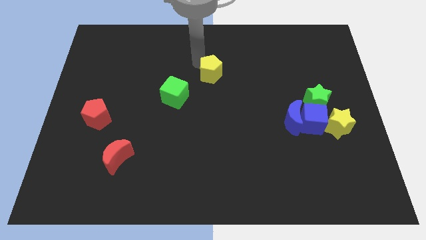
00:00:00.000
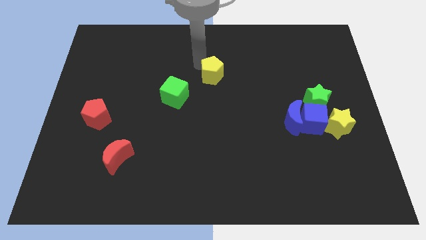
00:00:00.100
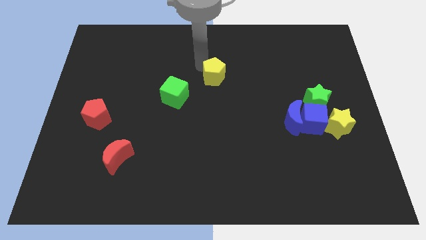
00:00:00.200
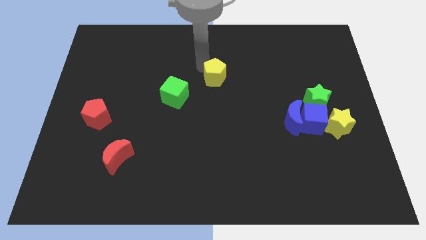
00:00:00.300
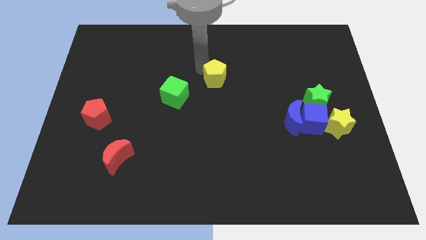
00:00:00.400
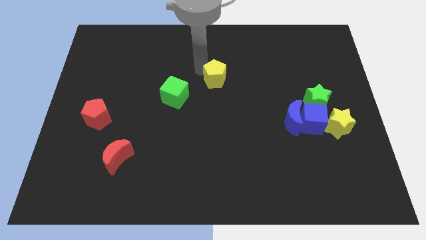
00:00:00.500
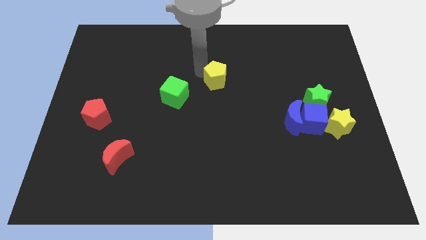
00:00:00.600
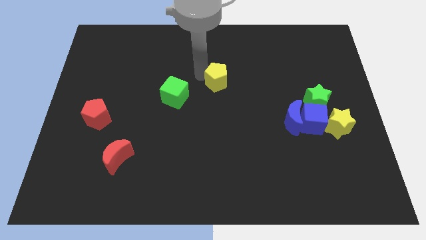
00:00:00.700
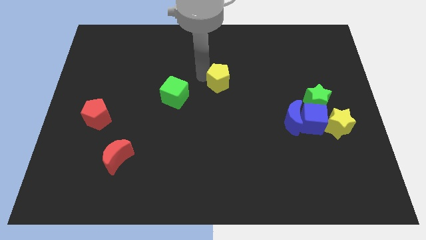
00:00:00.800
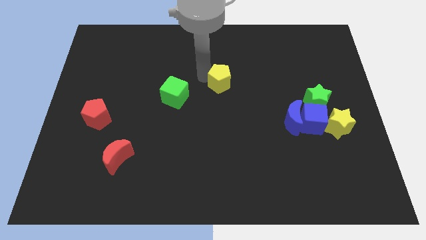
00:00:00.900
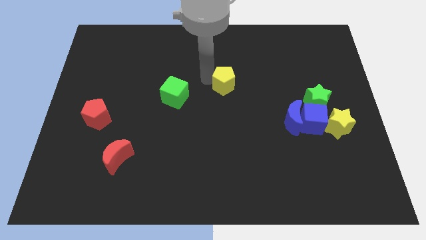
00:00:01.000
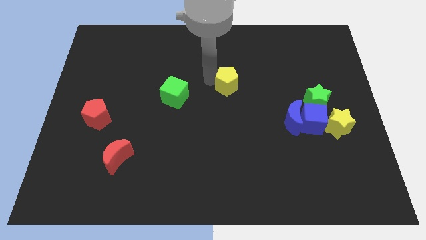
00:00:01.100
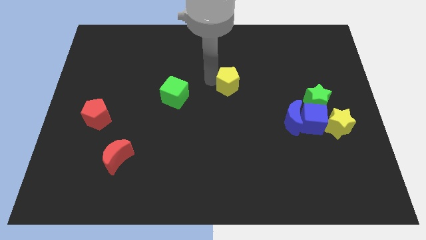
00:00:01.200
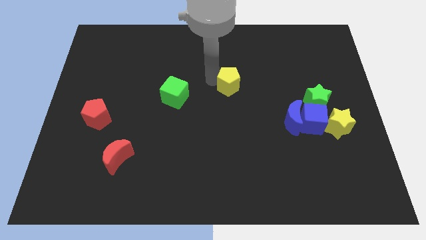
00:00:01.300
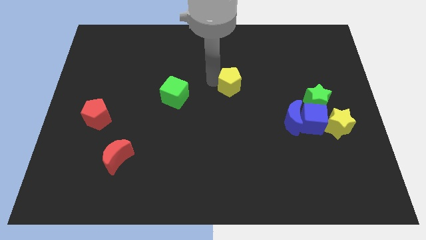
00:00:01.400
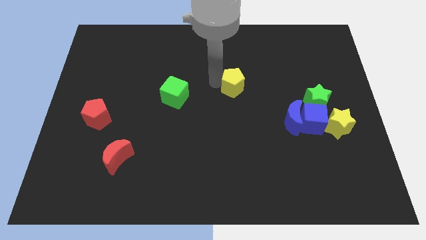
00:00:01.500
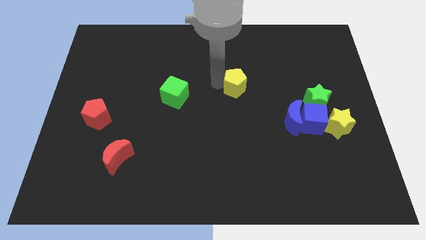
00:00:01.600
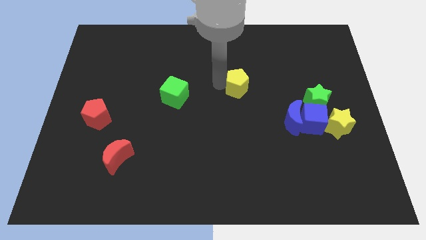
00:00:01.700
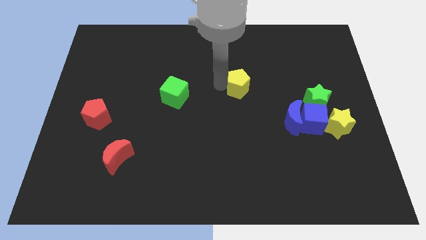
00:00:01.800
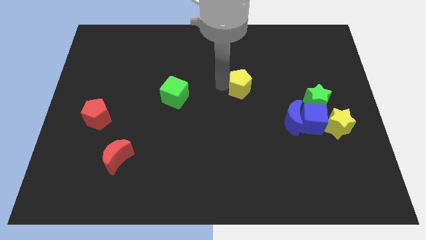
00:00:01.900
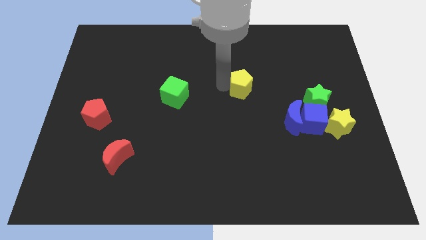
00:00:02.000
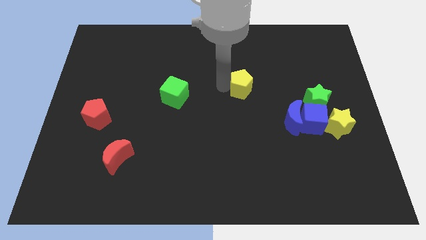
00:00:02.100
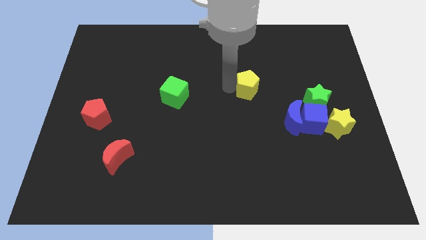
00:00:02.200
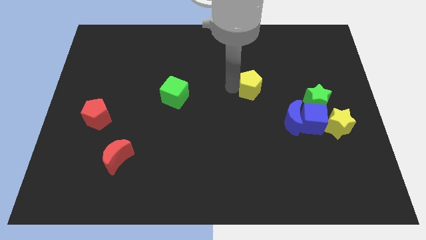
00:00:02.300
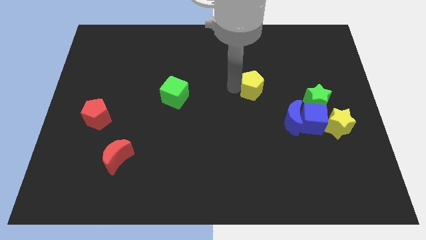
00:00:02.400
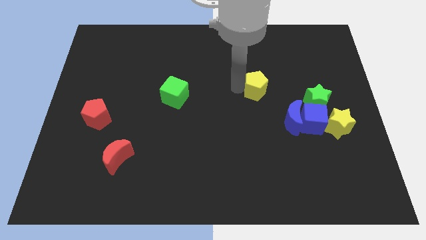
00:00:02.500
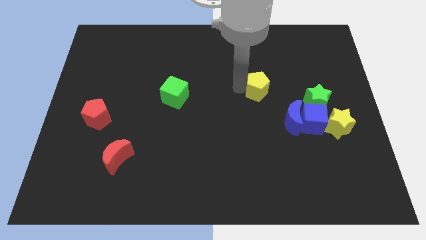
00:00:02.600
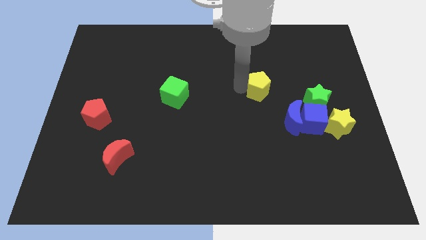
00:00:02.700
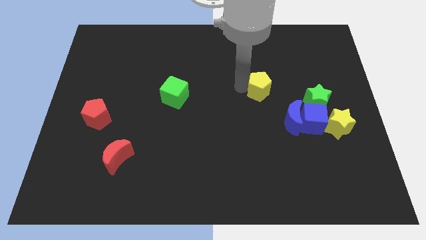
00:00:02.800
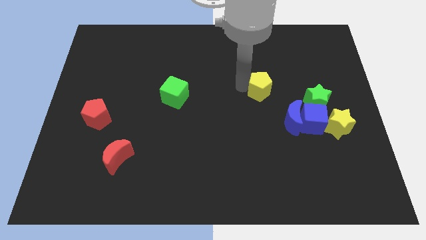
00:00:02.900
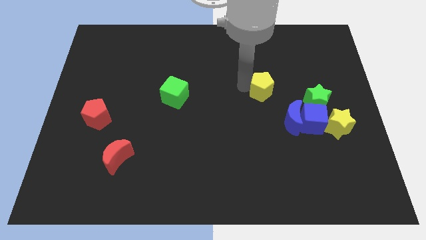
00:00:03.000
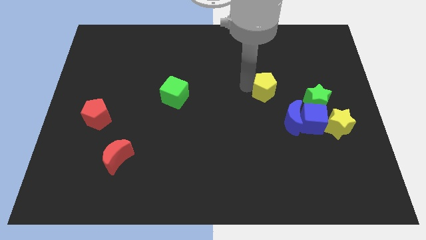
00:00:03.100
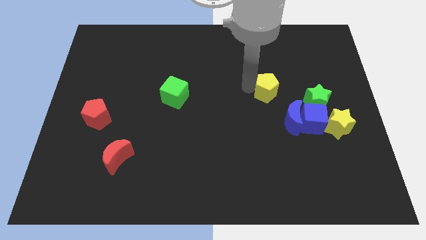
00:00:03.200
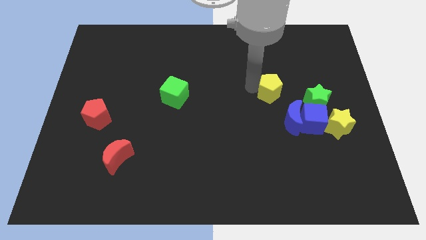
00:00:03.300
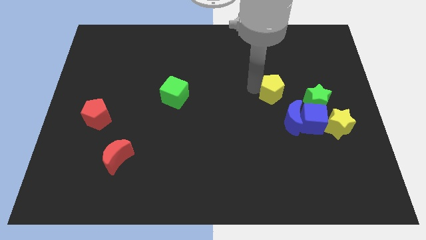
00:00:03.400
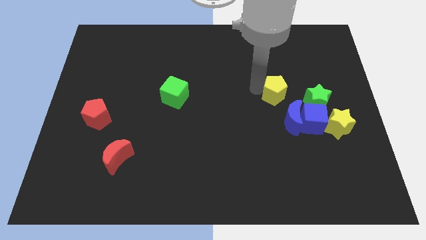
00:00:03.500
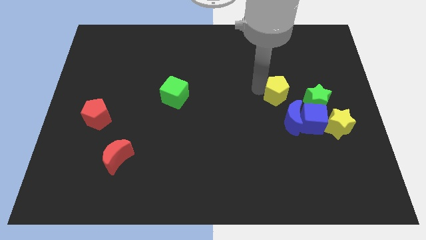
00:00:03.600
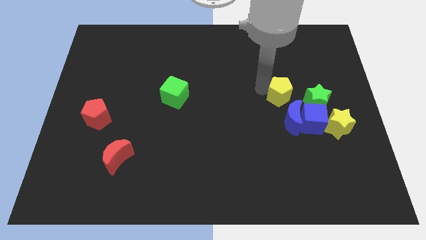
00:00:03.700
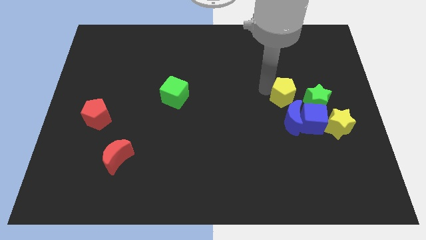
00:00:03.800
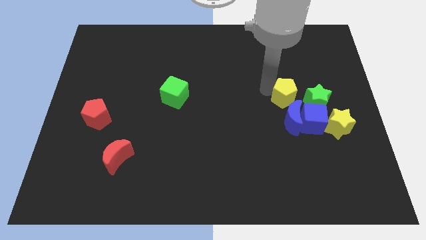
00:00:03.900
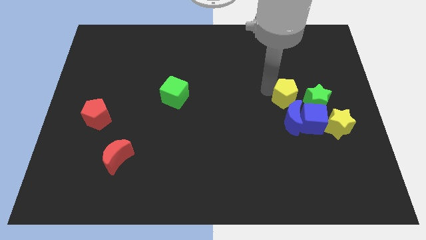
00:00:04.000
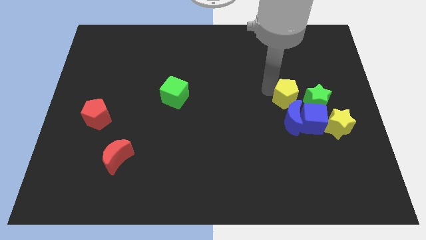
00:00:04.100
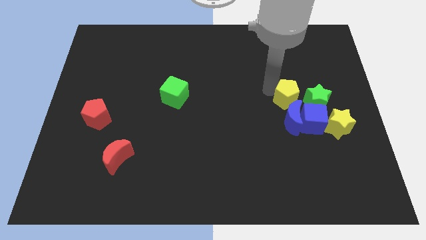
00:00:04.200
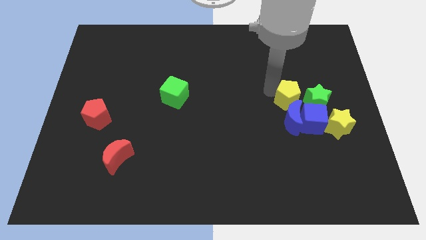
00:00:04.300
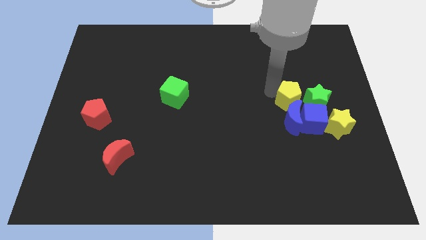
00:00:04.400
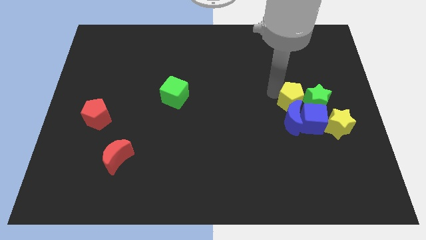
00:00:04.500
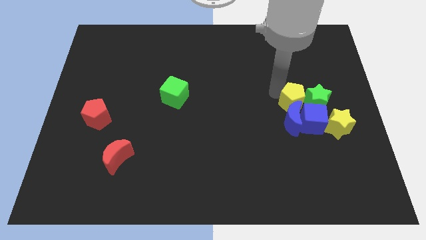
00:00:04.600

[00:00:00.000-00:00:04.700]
move the yellow pentagon into the group of blocks

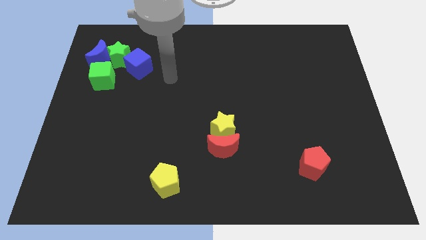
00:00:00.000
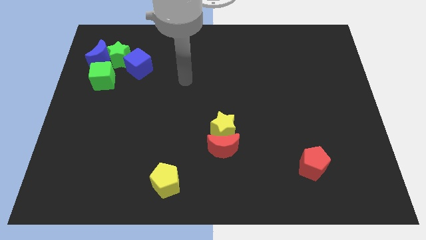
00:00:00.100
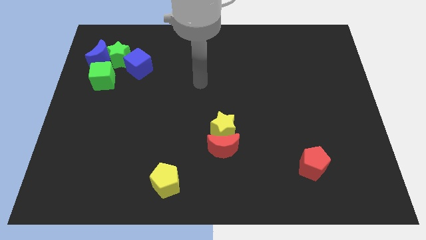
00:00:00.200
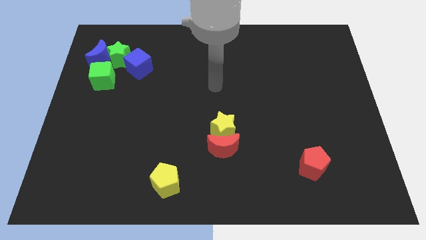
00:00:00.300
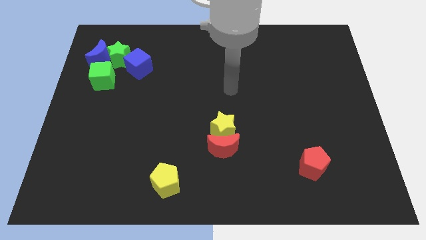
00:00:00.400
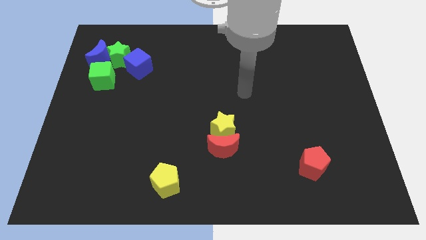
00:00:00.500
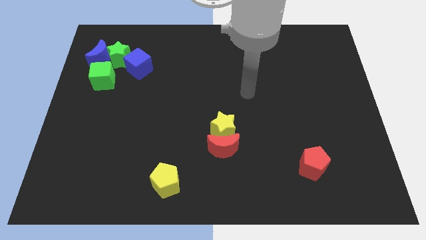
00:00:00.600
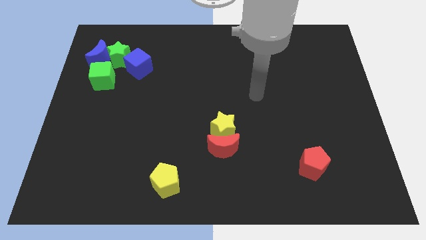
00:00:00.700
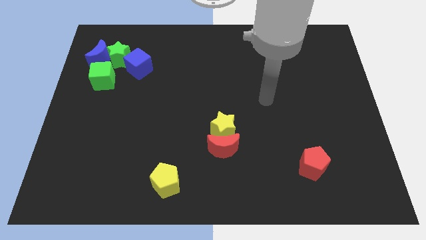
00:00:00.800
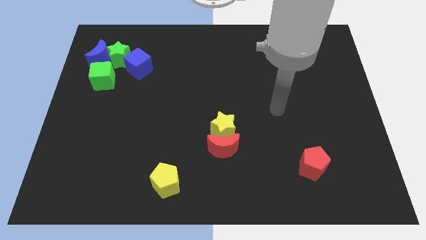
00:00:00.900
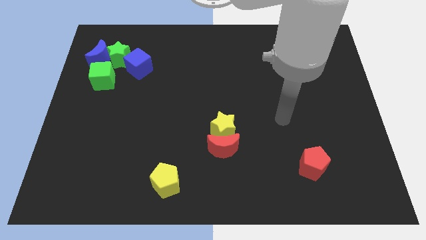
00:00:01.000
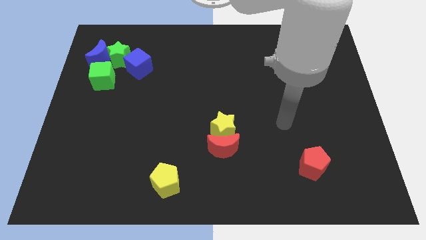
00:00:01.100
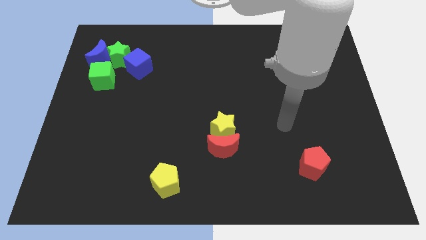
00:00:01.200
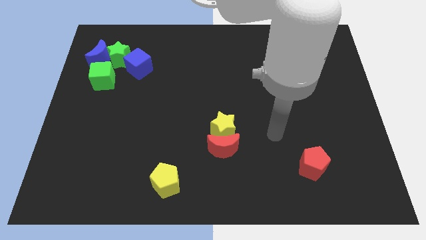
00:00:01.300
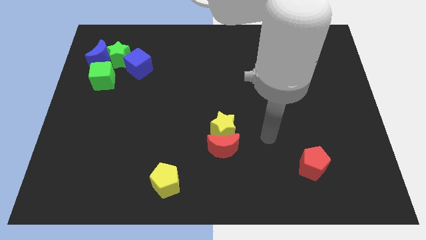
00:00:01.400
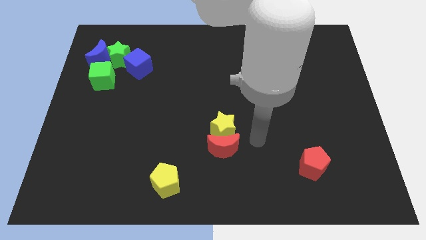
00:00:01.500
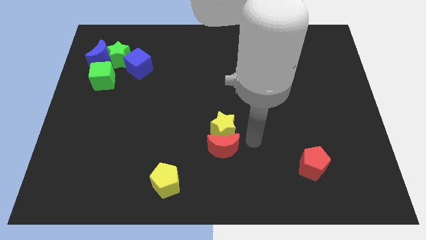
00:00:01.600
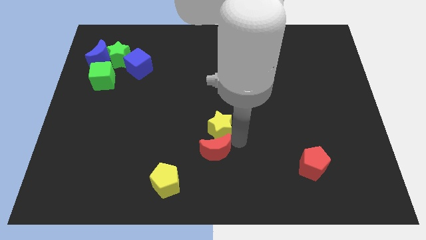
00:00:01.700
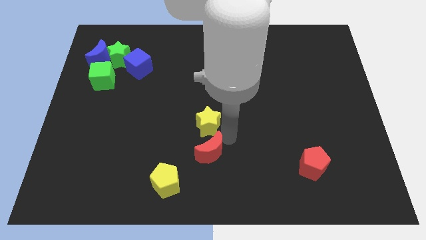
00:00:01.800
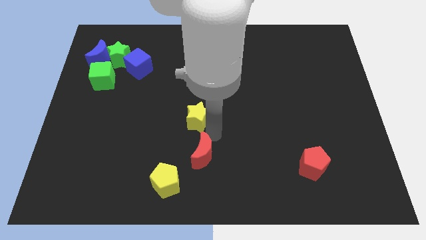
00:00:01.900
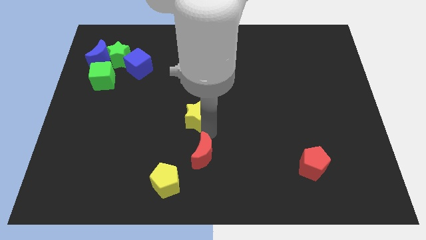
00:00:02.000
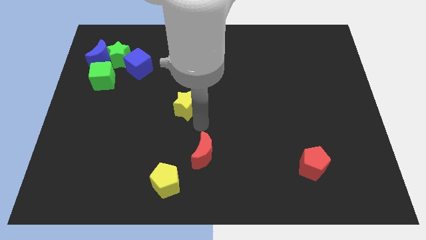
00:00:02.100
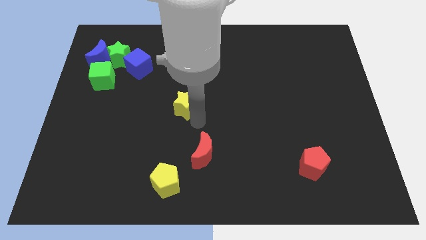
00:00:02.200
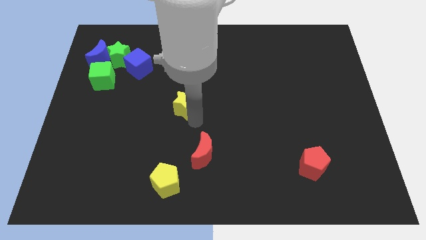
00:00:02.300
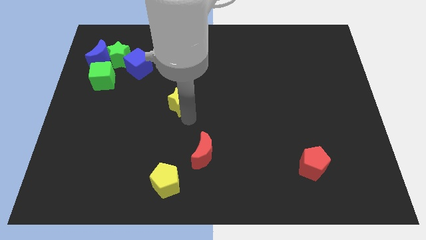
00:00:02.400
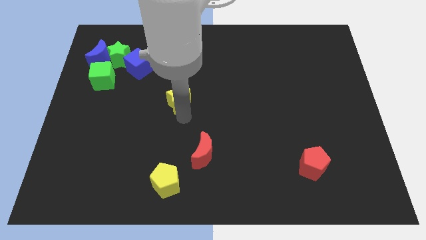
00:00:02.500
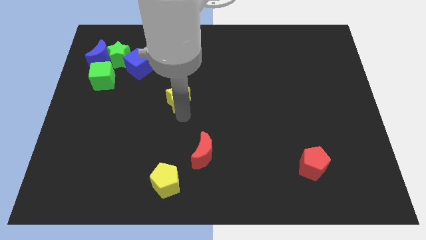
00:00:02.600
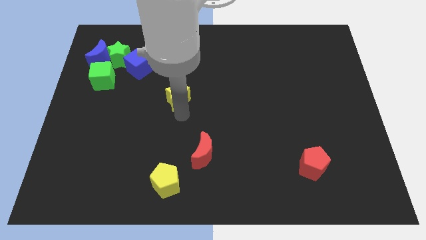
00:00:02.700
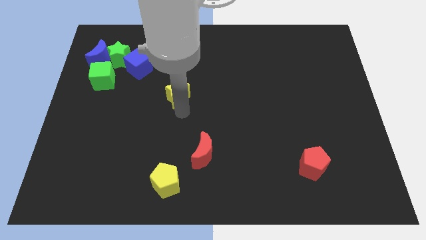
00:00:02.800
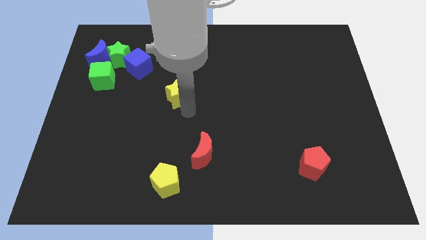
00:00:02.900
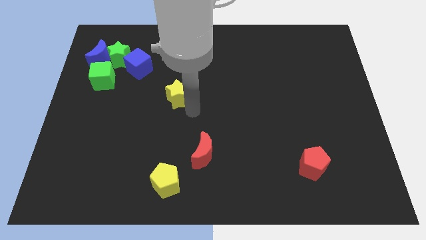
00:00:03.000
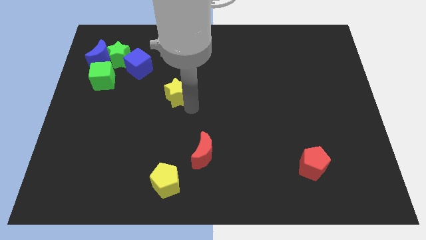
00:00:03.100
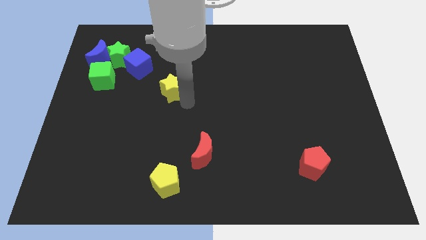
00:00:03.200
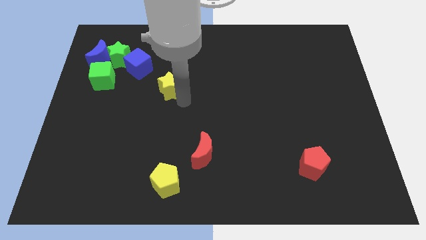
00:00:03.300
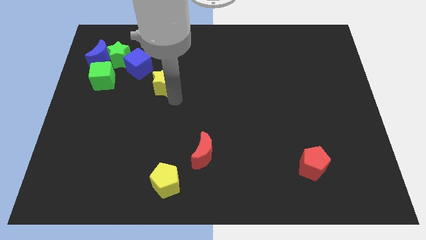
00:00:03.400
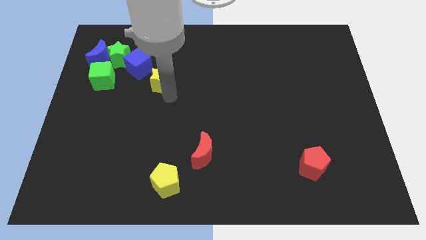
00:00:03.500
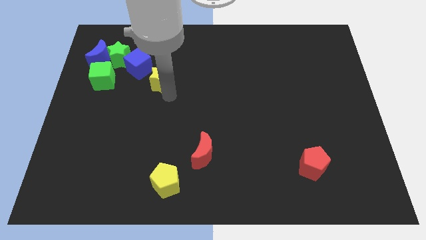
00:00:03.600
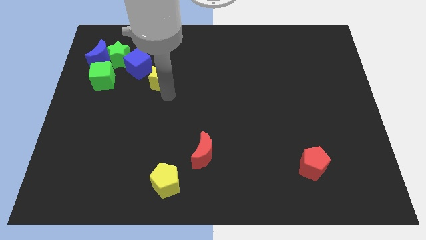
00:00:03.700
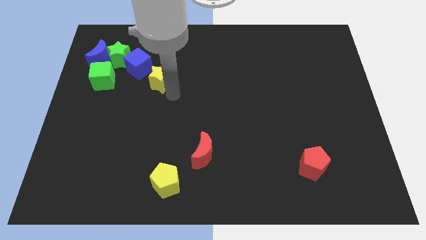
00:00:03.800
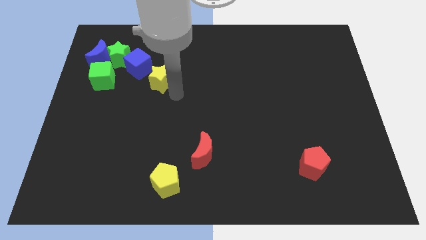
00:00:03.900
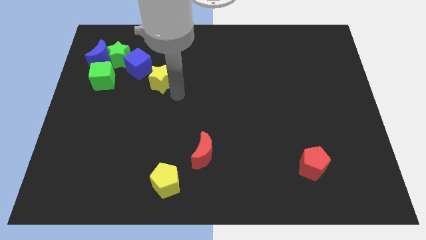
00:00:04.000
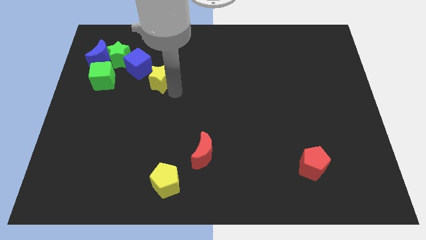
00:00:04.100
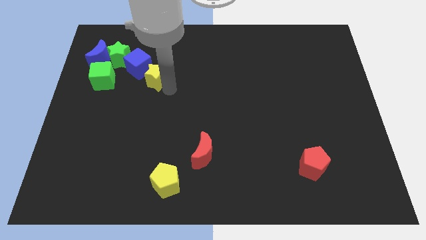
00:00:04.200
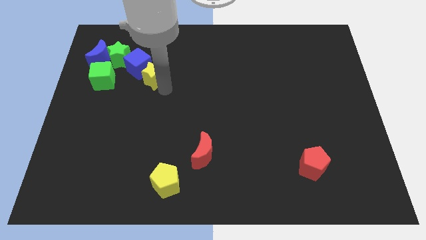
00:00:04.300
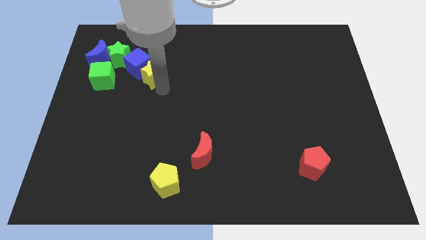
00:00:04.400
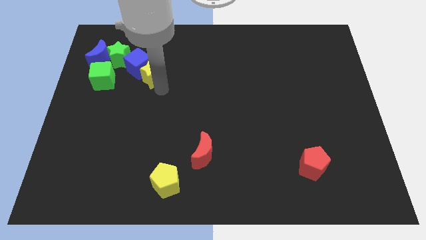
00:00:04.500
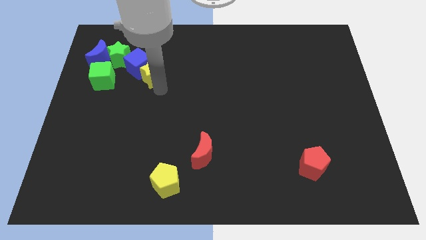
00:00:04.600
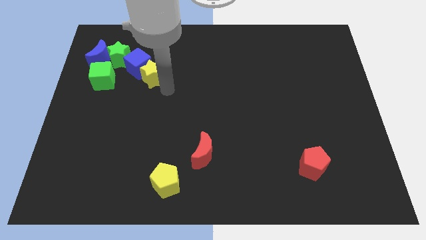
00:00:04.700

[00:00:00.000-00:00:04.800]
push the yellow star into the right side of the blue cube
